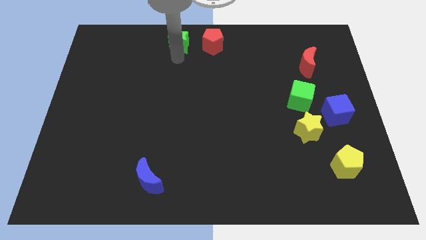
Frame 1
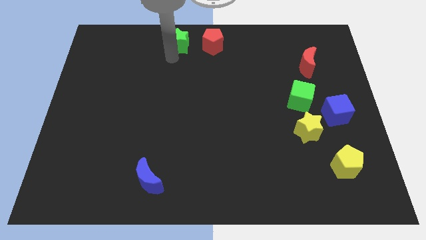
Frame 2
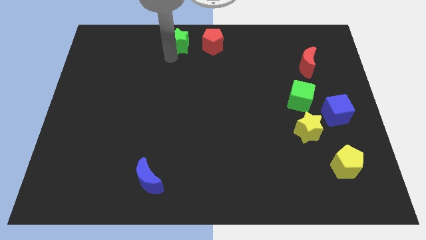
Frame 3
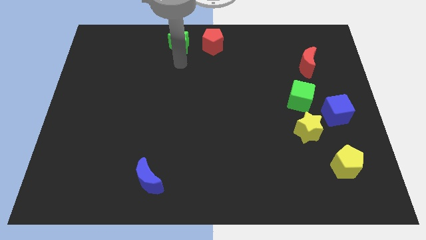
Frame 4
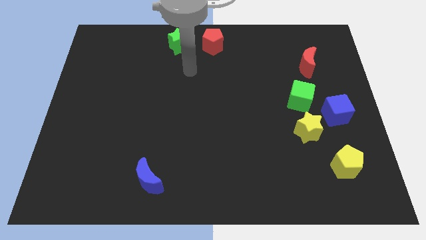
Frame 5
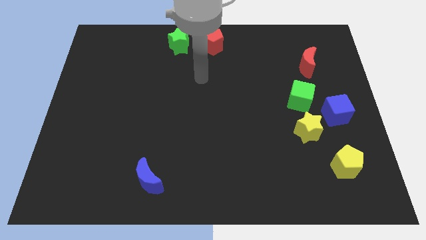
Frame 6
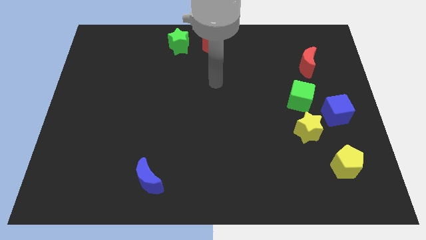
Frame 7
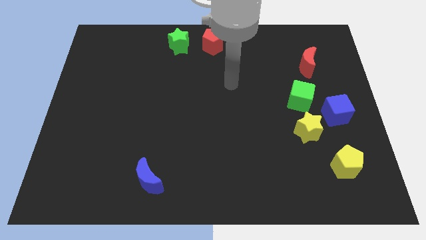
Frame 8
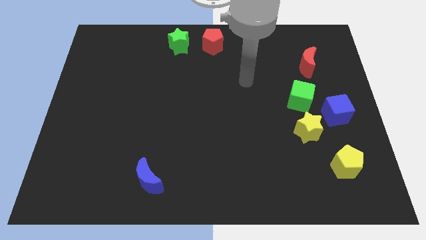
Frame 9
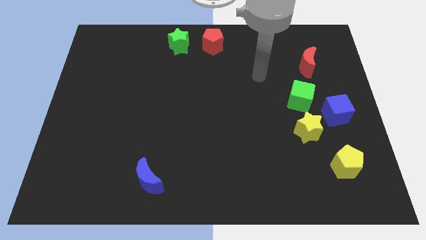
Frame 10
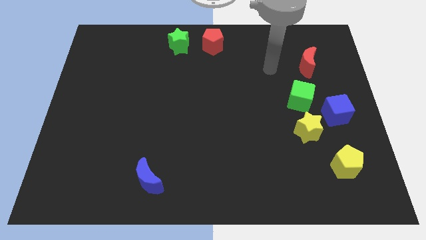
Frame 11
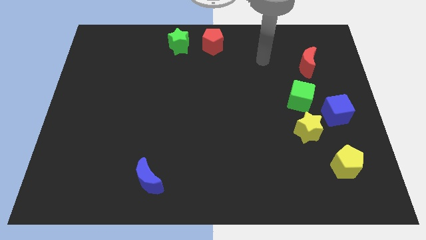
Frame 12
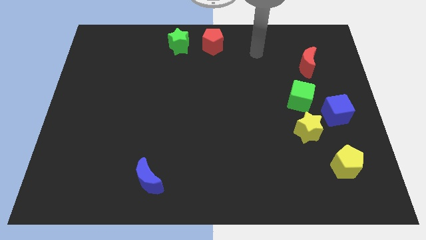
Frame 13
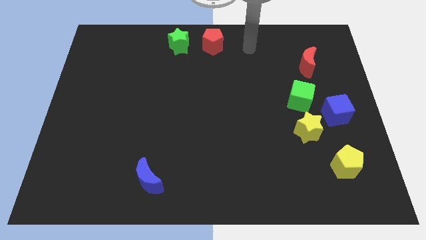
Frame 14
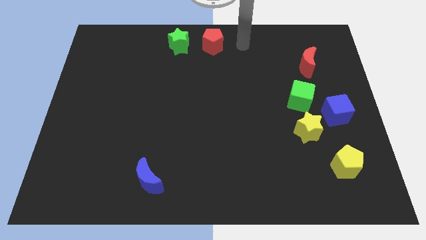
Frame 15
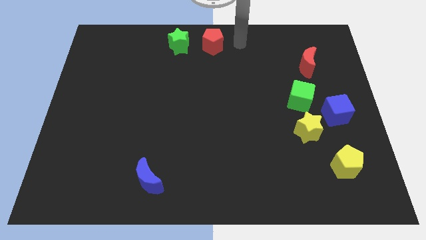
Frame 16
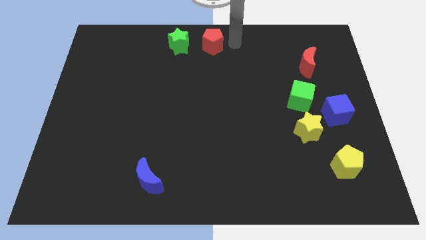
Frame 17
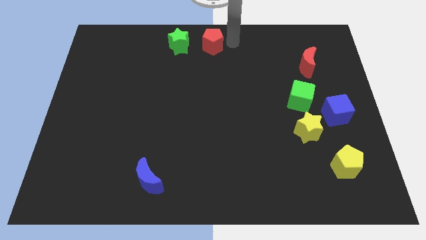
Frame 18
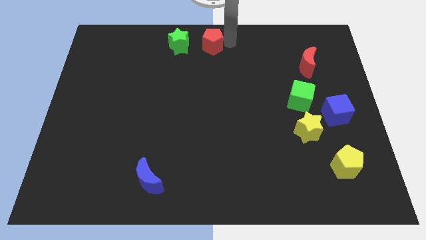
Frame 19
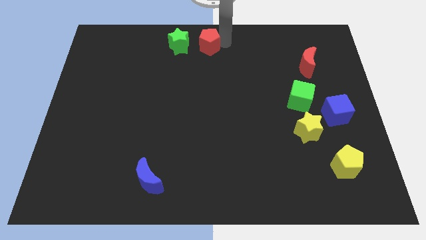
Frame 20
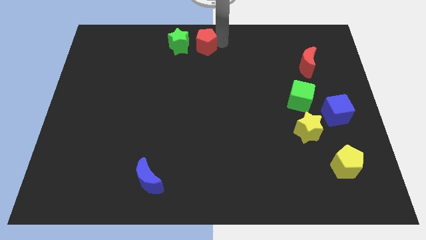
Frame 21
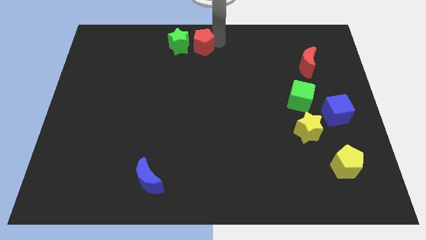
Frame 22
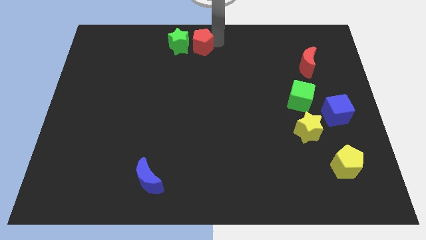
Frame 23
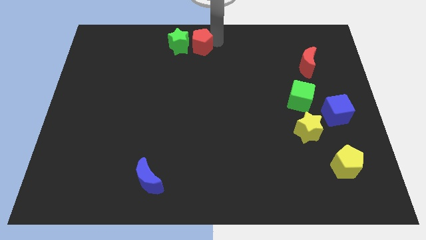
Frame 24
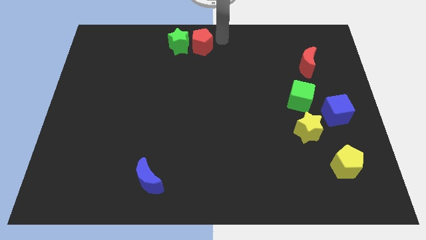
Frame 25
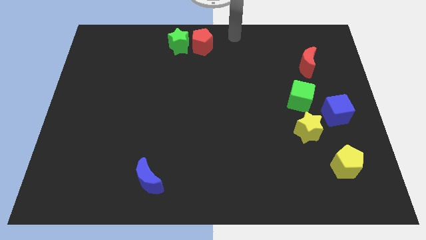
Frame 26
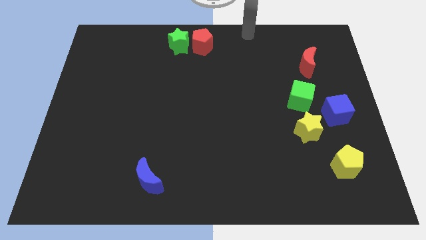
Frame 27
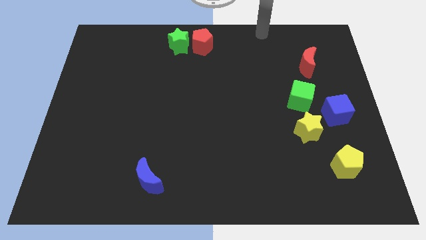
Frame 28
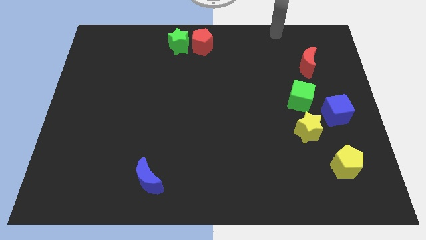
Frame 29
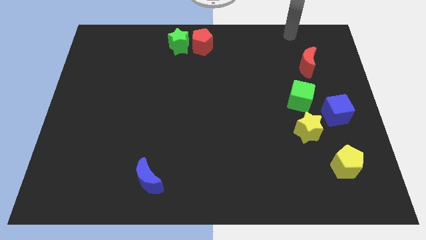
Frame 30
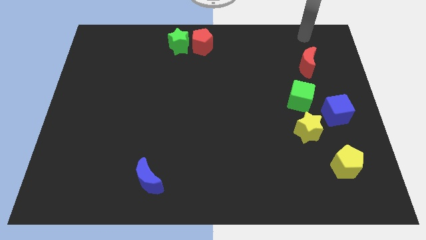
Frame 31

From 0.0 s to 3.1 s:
slide the red pentagon to the top middle of the board

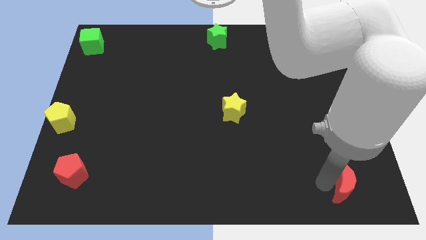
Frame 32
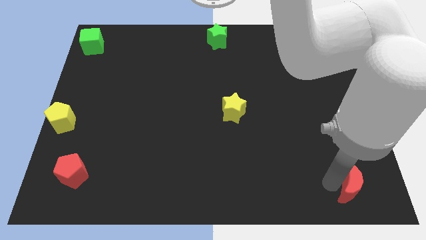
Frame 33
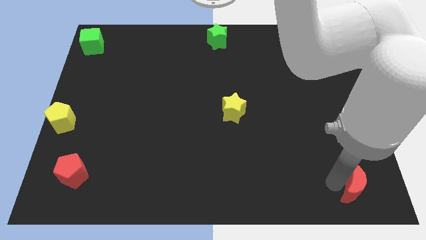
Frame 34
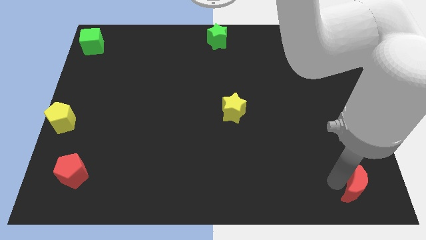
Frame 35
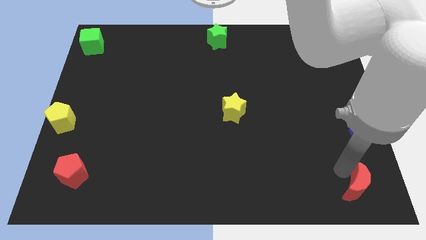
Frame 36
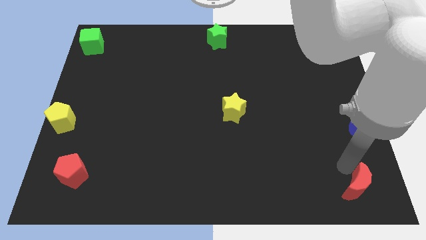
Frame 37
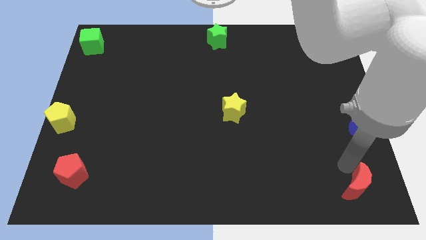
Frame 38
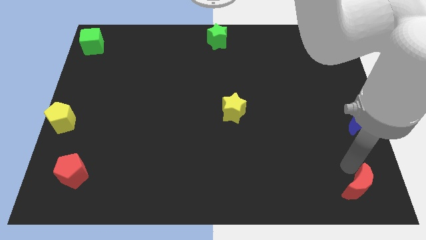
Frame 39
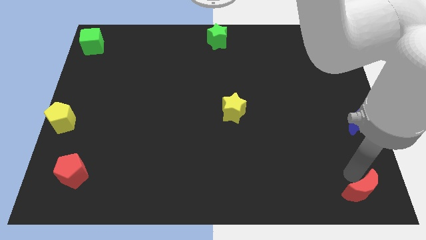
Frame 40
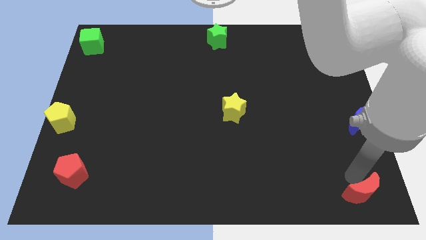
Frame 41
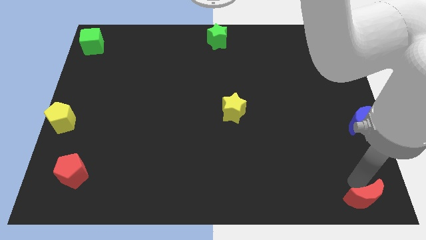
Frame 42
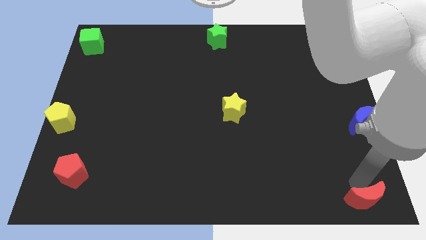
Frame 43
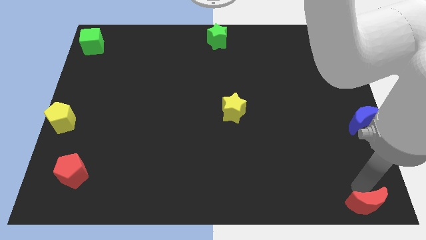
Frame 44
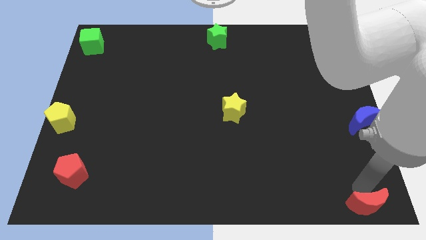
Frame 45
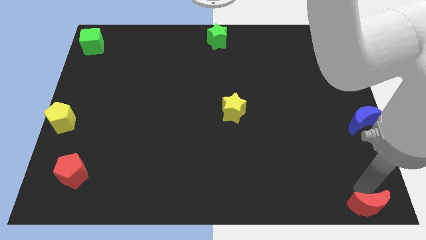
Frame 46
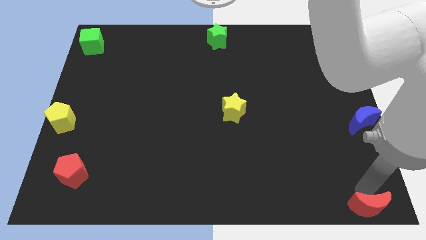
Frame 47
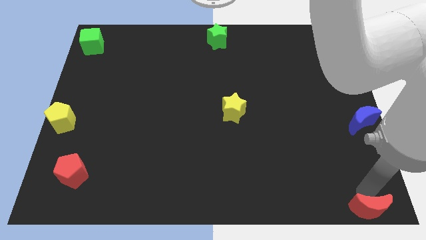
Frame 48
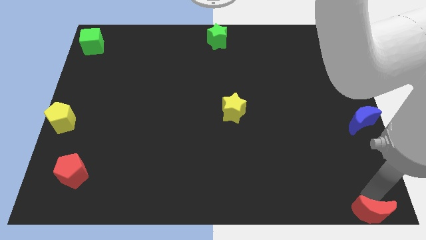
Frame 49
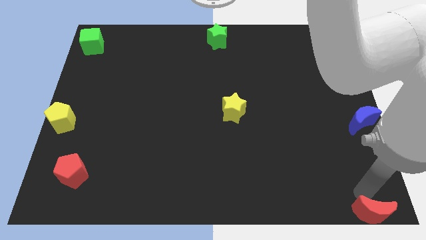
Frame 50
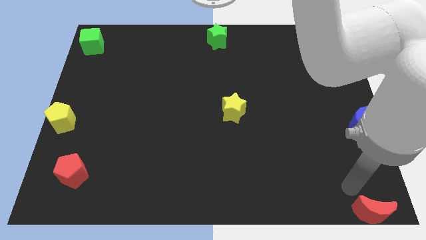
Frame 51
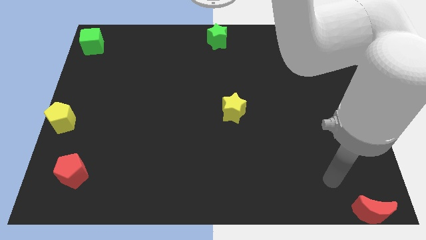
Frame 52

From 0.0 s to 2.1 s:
push red moon to the right bottom corner

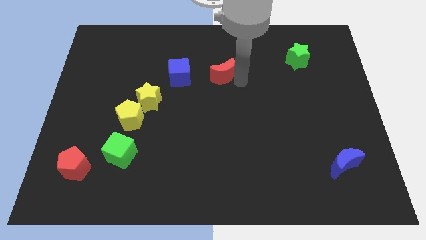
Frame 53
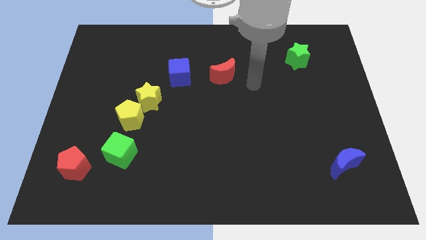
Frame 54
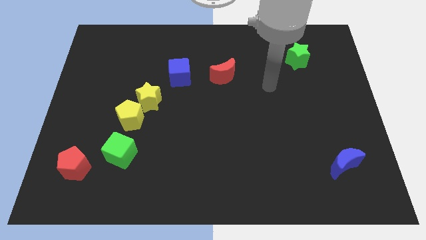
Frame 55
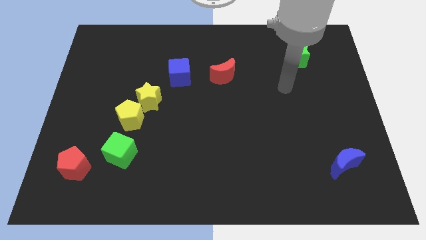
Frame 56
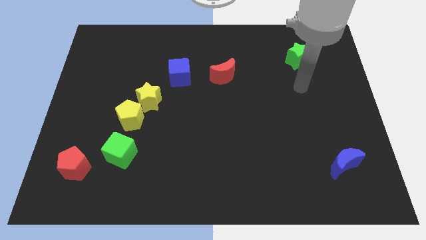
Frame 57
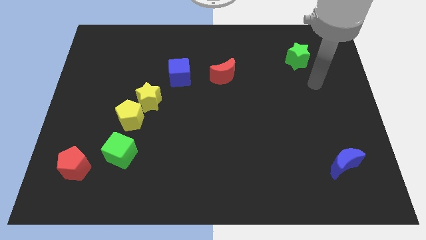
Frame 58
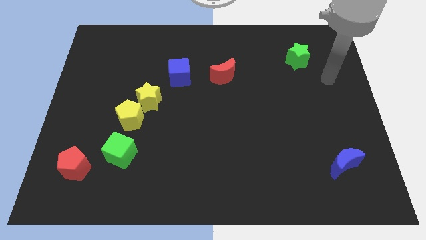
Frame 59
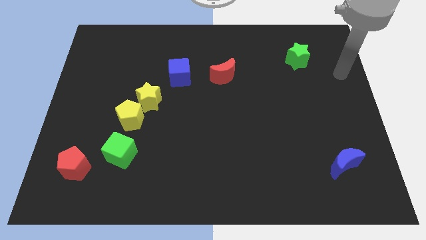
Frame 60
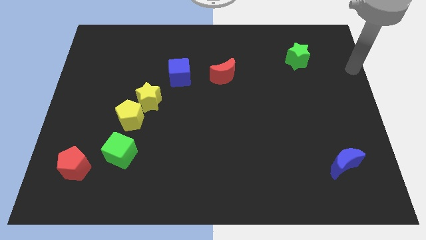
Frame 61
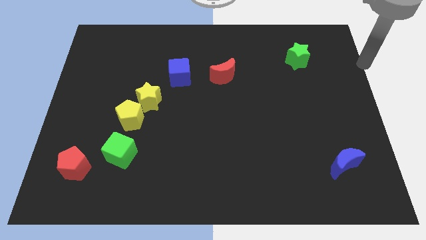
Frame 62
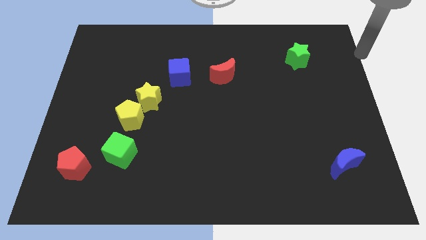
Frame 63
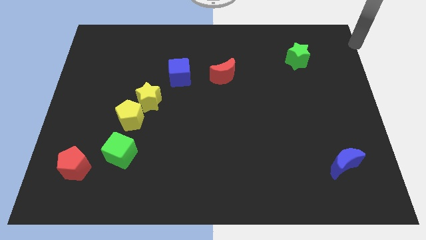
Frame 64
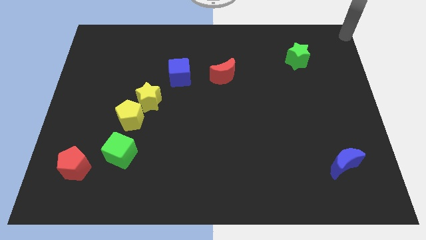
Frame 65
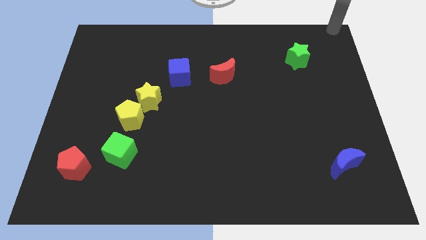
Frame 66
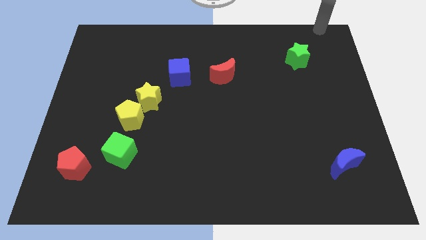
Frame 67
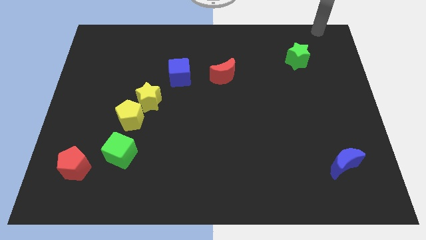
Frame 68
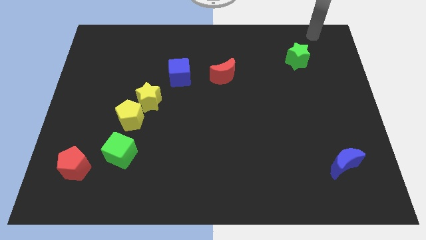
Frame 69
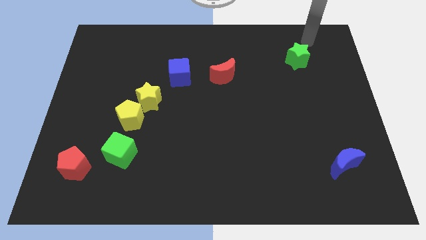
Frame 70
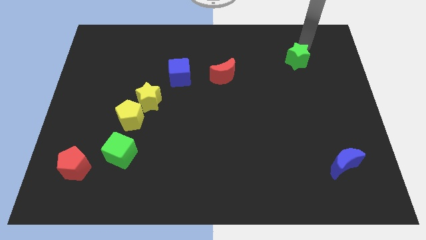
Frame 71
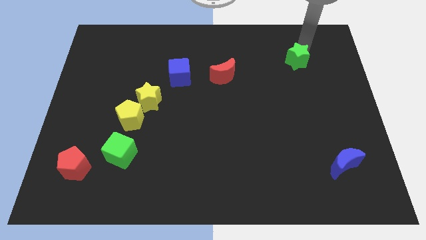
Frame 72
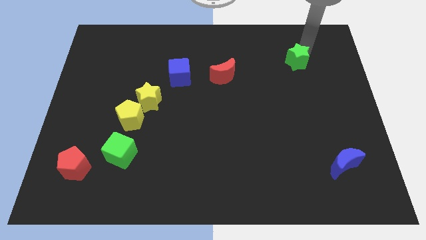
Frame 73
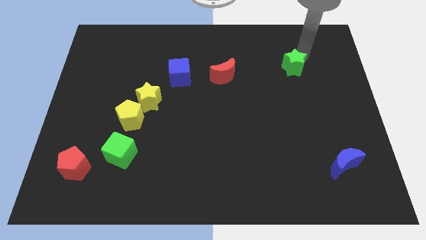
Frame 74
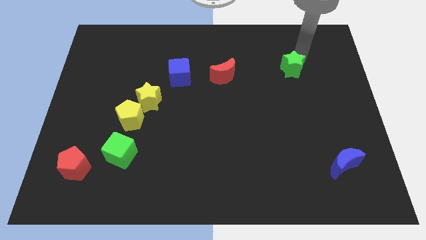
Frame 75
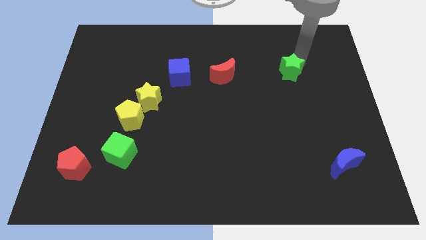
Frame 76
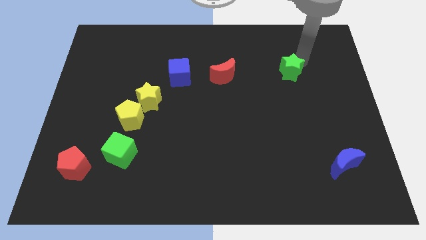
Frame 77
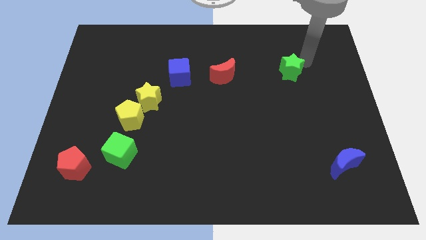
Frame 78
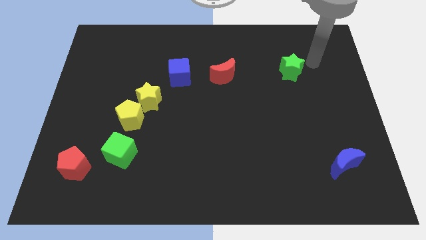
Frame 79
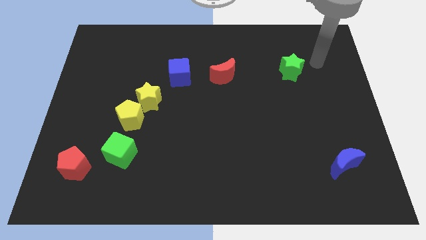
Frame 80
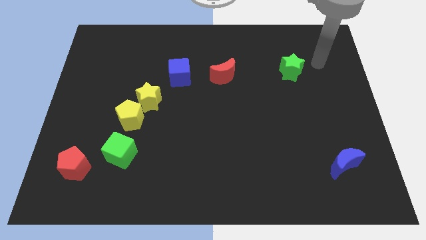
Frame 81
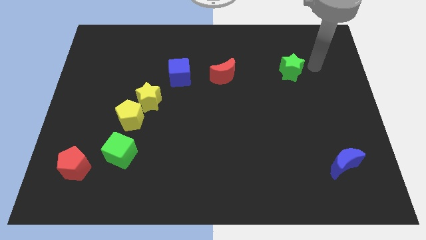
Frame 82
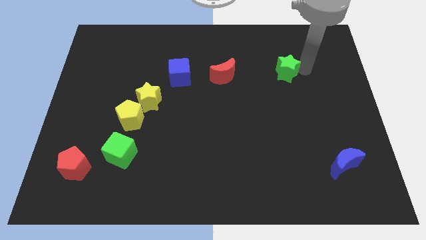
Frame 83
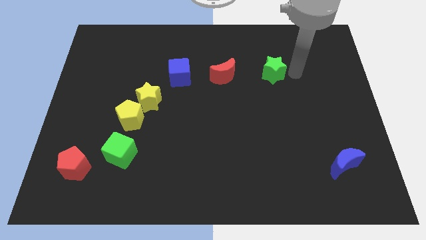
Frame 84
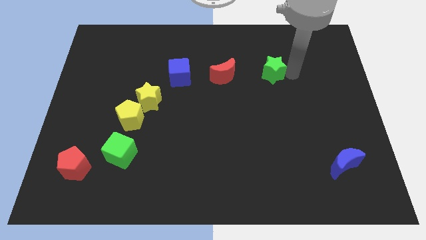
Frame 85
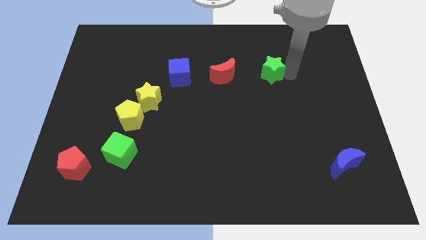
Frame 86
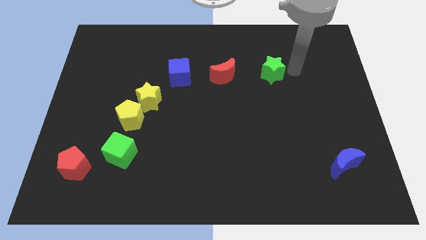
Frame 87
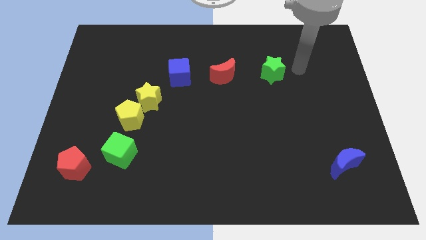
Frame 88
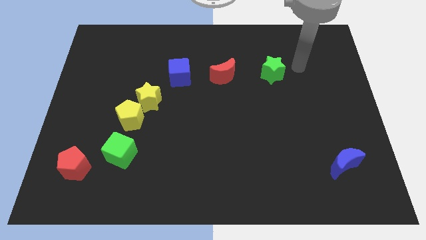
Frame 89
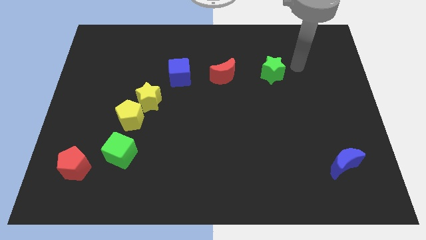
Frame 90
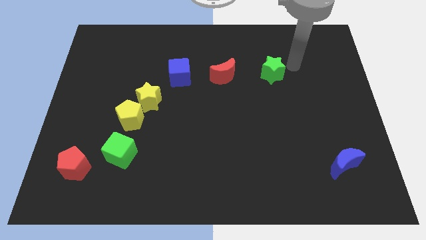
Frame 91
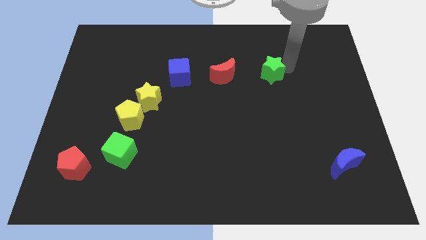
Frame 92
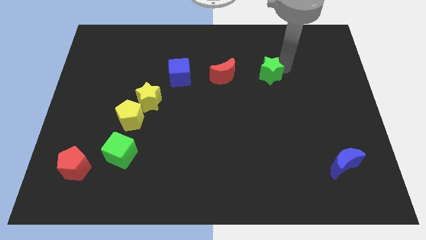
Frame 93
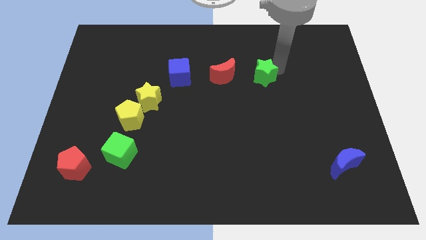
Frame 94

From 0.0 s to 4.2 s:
push the green star slightly to the center
